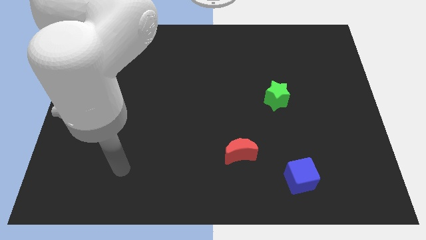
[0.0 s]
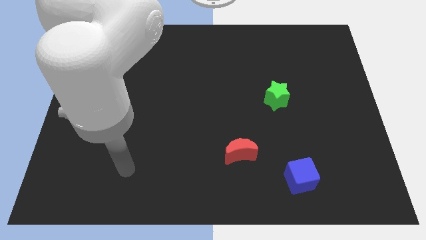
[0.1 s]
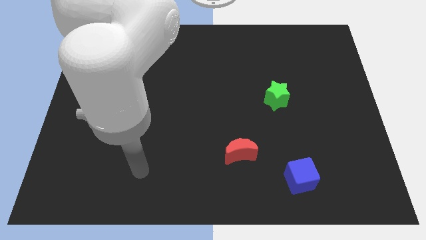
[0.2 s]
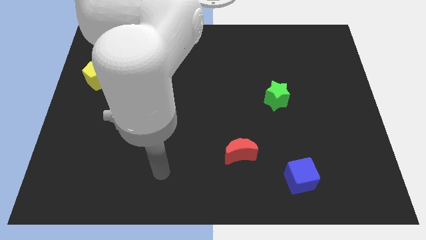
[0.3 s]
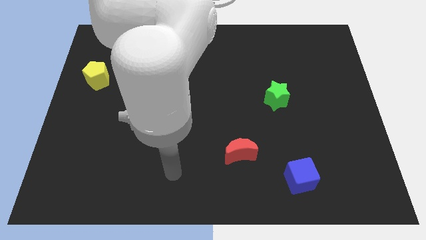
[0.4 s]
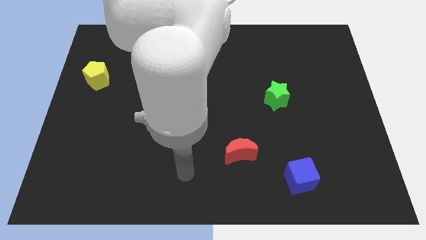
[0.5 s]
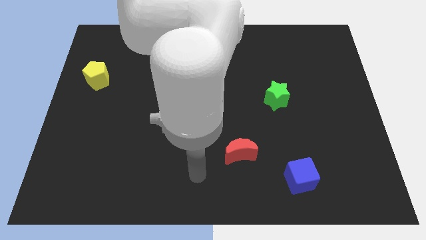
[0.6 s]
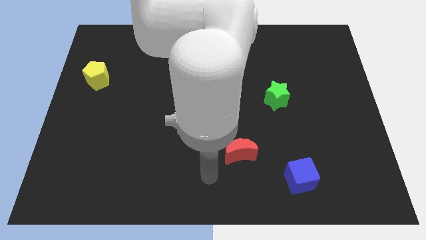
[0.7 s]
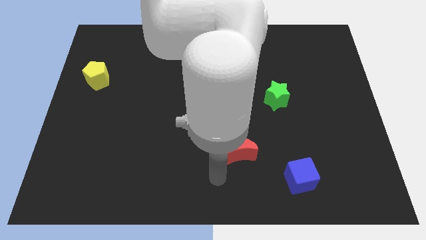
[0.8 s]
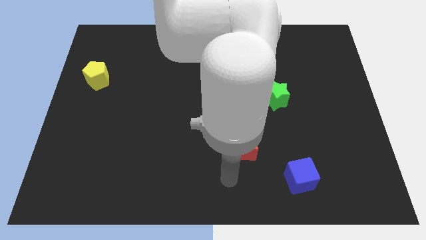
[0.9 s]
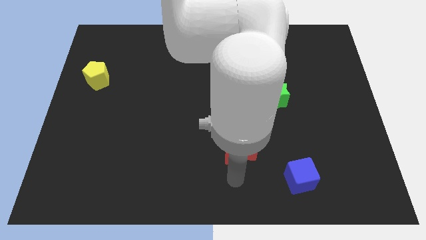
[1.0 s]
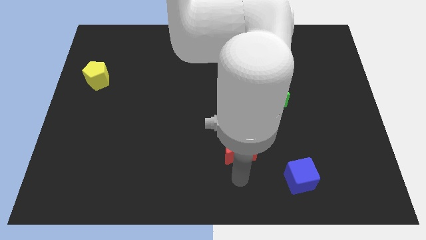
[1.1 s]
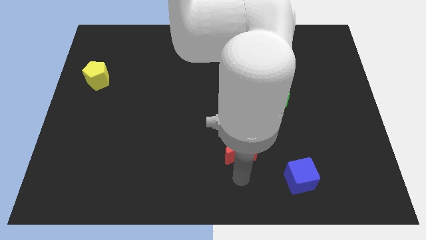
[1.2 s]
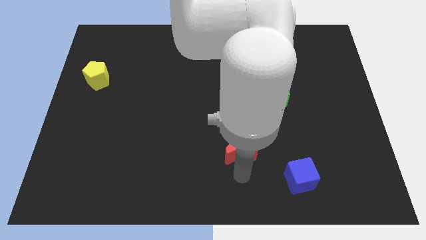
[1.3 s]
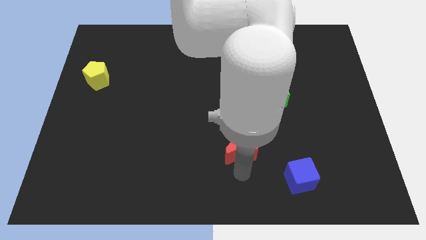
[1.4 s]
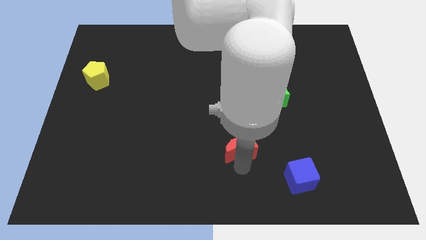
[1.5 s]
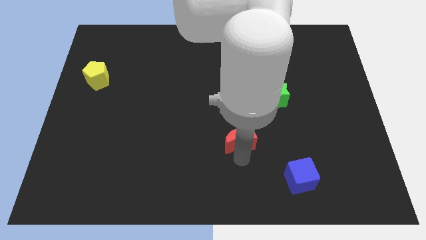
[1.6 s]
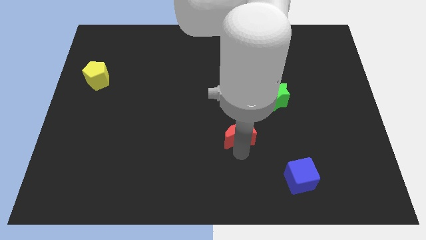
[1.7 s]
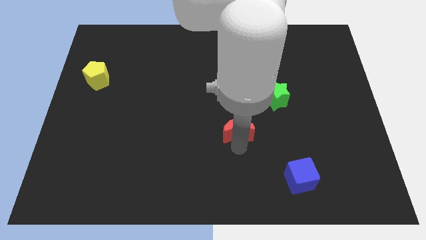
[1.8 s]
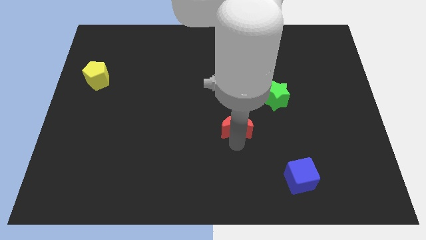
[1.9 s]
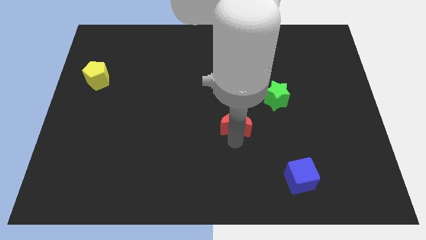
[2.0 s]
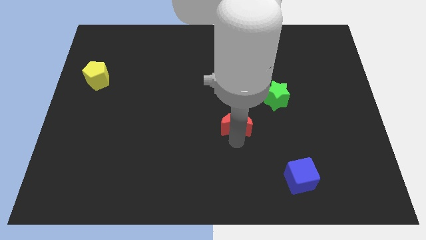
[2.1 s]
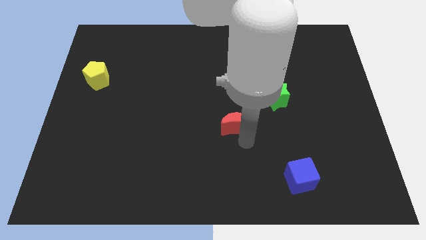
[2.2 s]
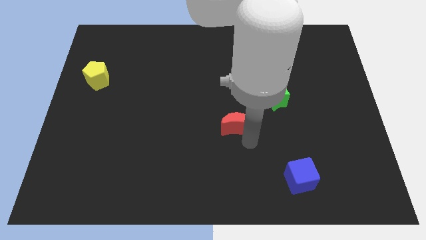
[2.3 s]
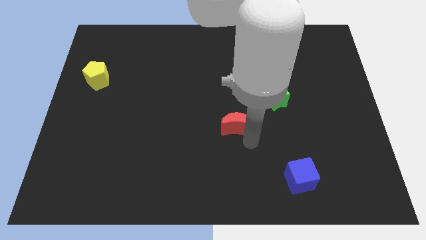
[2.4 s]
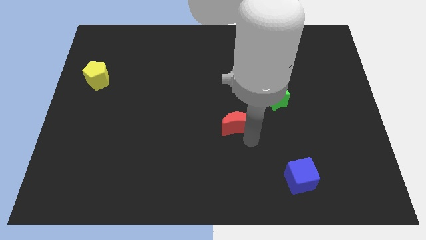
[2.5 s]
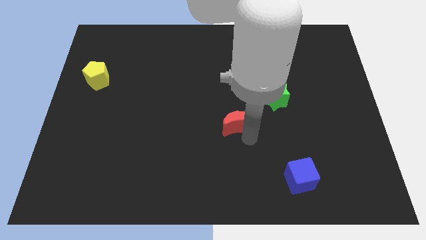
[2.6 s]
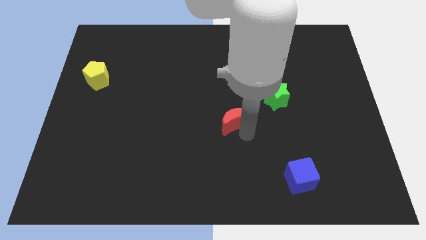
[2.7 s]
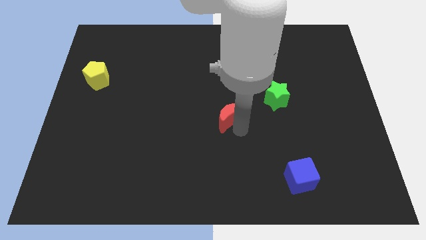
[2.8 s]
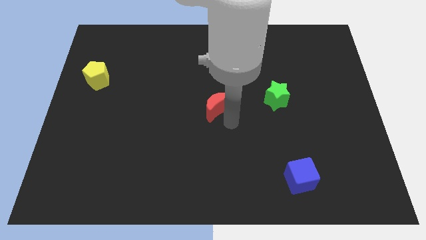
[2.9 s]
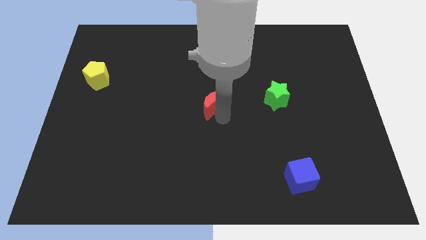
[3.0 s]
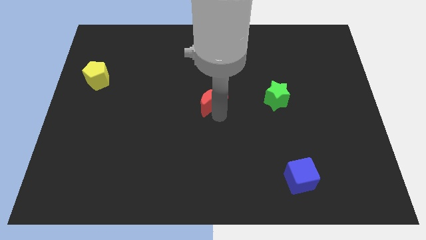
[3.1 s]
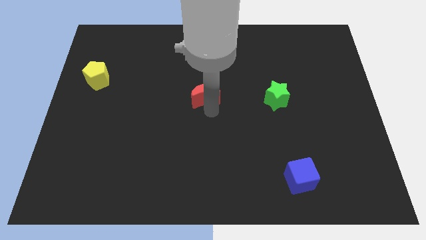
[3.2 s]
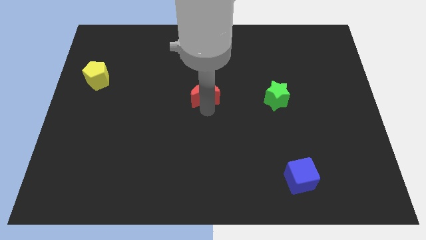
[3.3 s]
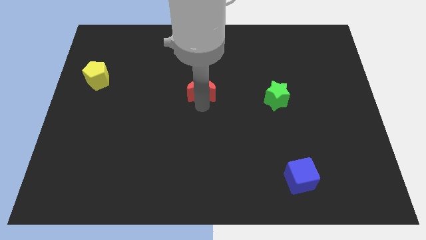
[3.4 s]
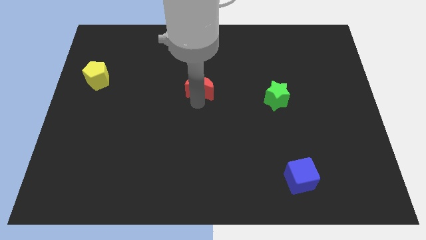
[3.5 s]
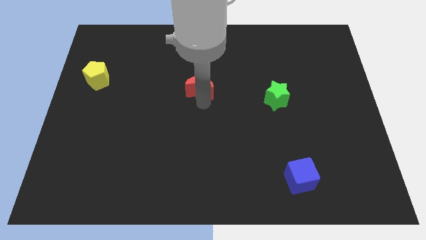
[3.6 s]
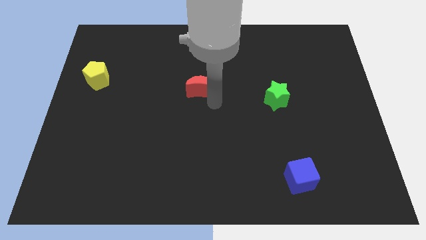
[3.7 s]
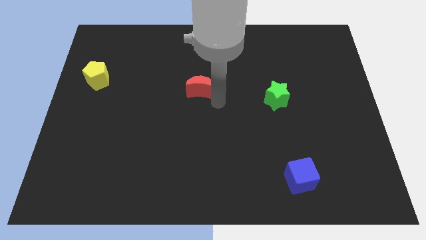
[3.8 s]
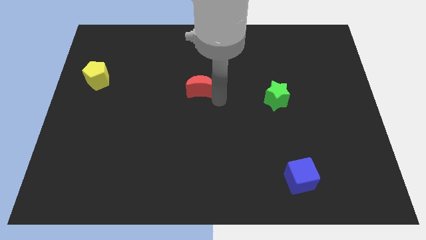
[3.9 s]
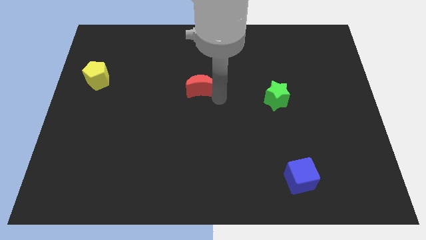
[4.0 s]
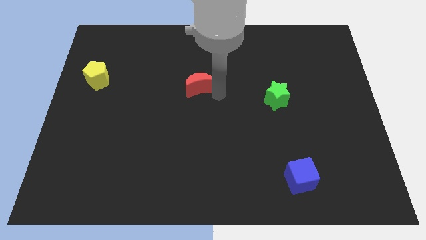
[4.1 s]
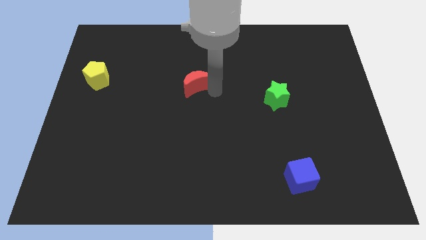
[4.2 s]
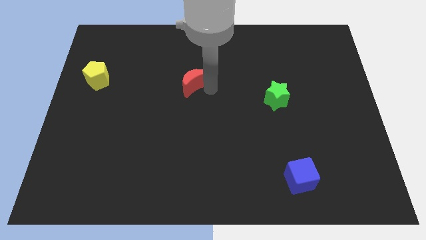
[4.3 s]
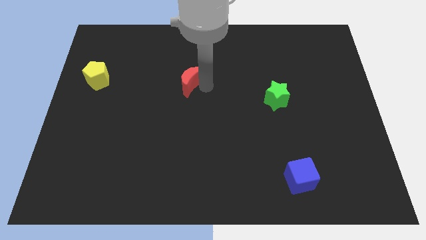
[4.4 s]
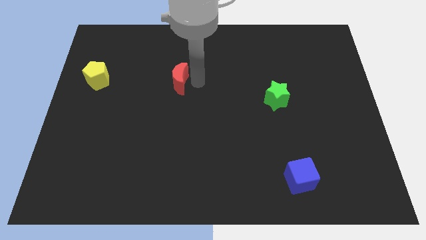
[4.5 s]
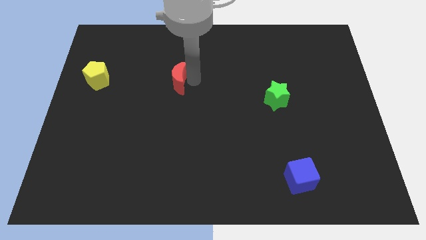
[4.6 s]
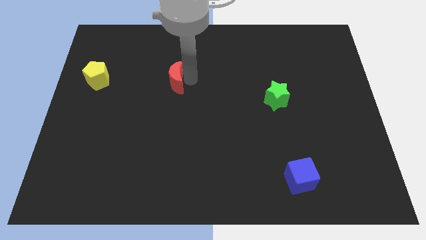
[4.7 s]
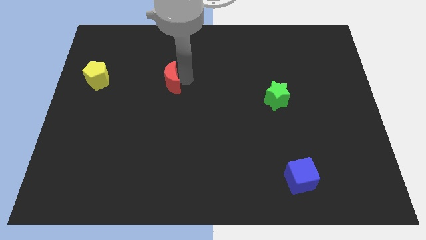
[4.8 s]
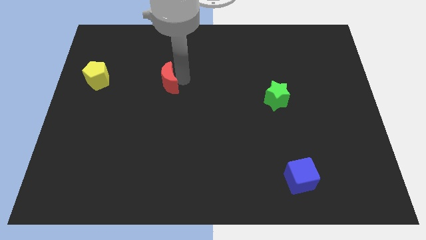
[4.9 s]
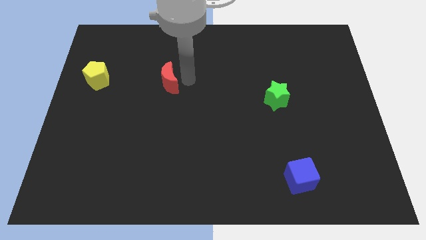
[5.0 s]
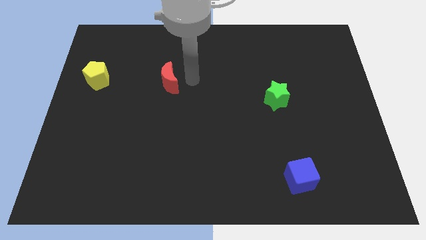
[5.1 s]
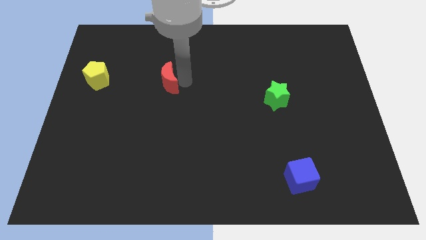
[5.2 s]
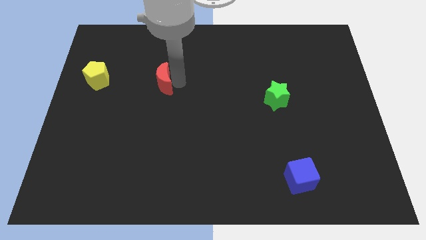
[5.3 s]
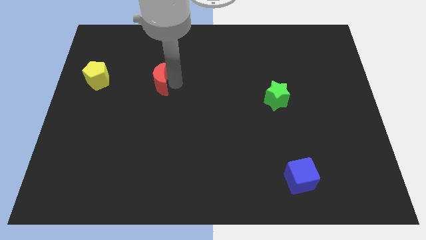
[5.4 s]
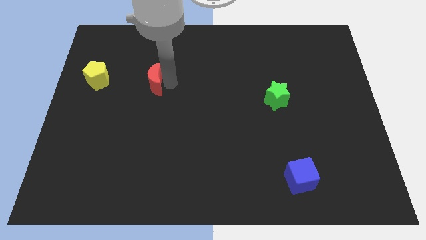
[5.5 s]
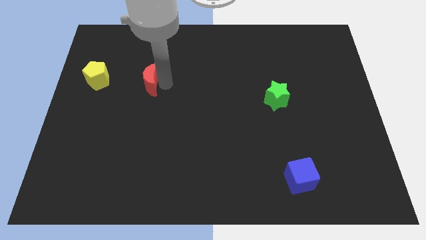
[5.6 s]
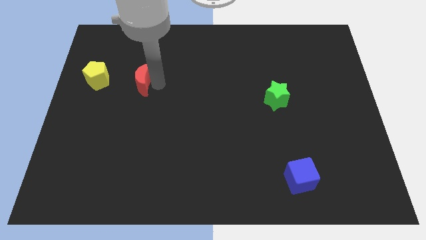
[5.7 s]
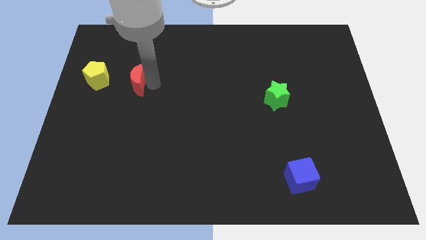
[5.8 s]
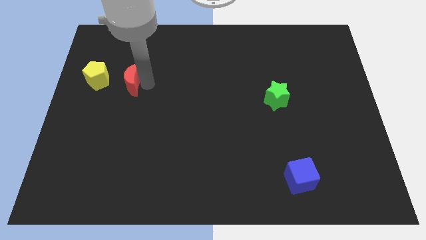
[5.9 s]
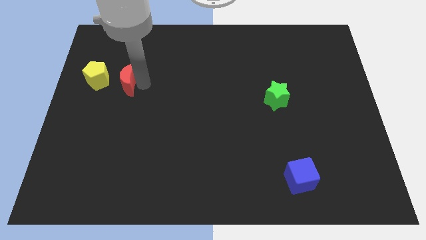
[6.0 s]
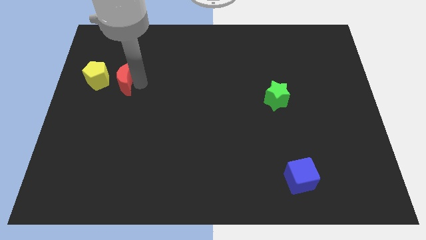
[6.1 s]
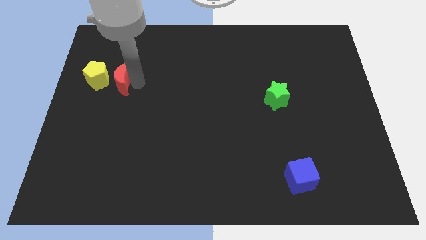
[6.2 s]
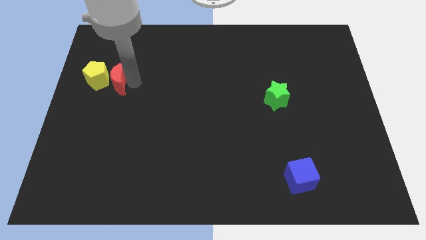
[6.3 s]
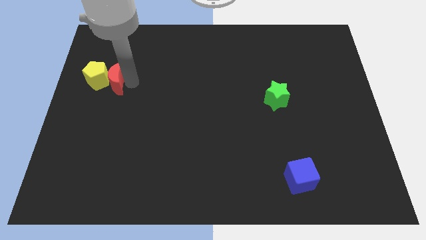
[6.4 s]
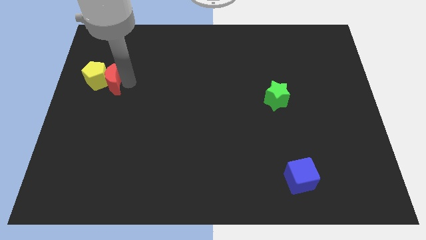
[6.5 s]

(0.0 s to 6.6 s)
move the moon next to the yellow pentagon

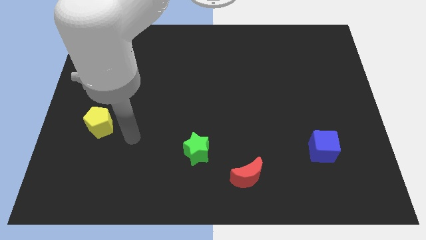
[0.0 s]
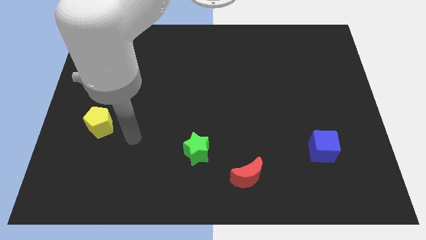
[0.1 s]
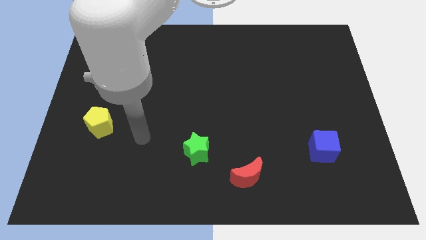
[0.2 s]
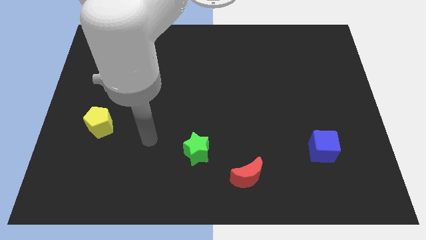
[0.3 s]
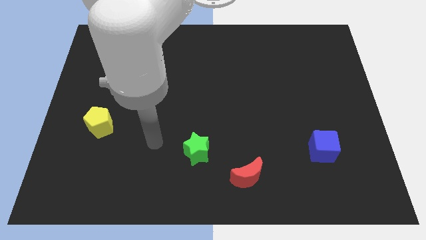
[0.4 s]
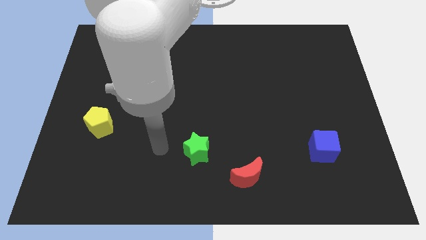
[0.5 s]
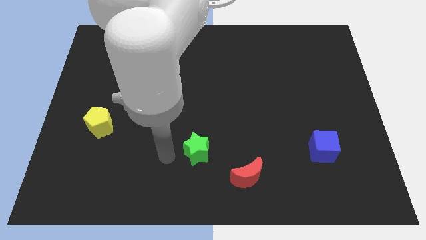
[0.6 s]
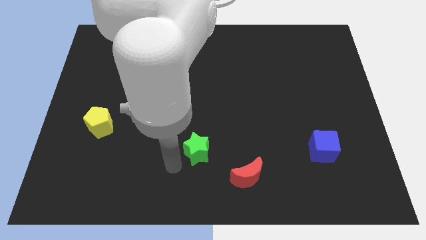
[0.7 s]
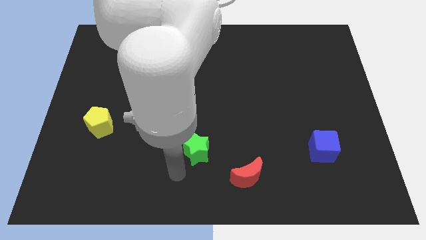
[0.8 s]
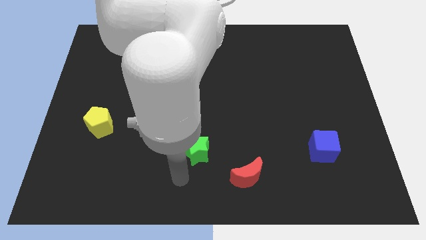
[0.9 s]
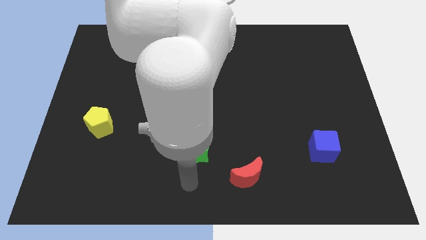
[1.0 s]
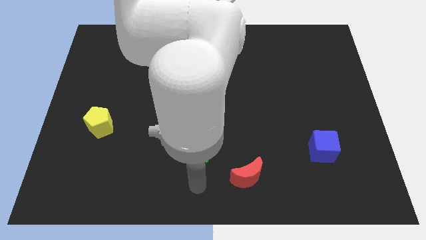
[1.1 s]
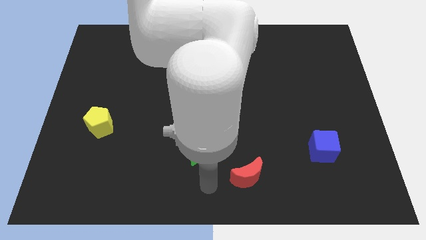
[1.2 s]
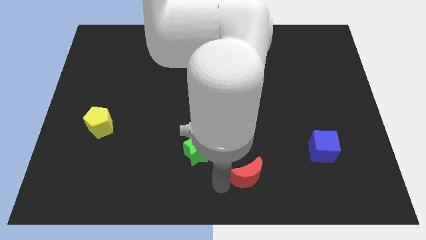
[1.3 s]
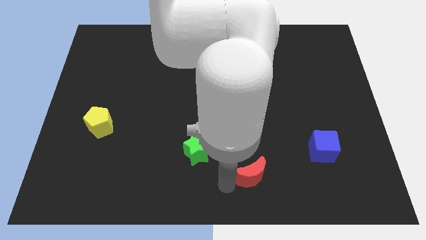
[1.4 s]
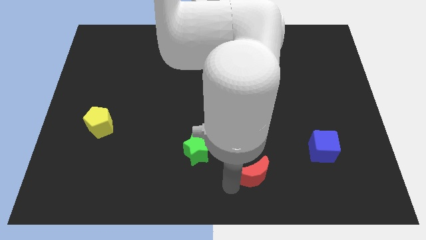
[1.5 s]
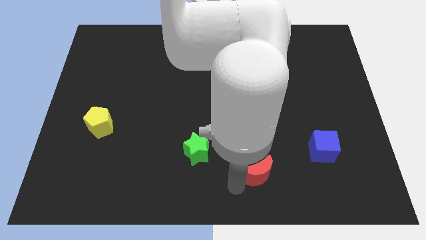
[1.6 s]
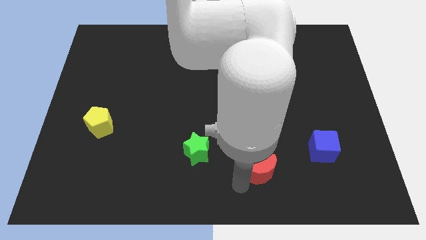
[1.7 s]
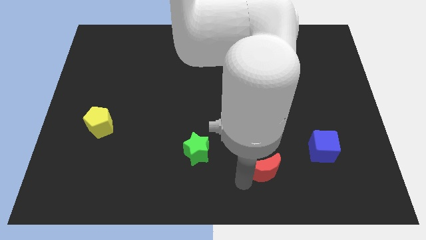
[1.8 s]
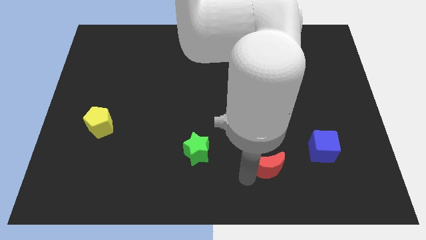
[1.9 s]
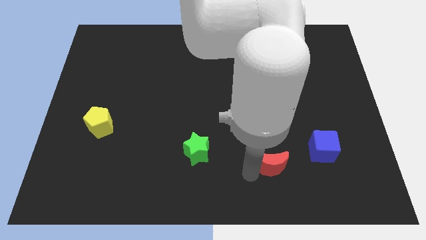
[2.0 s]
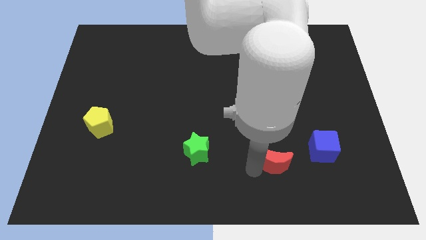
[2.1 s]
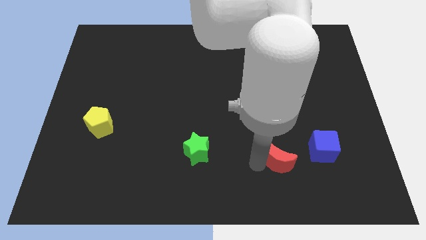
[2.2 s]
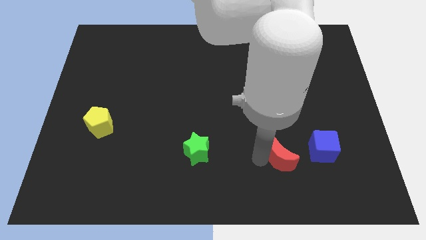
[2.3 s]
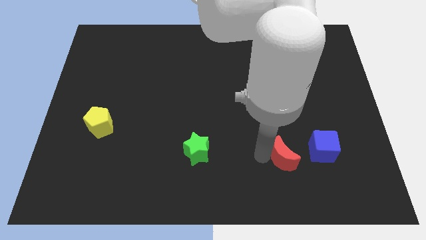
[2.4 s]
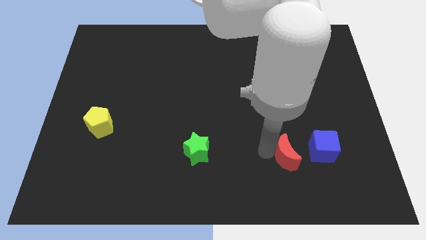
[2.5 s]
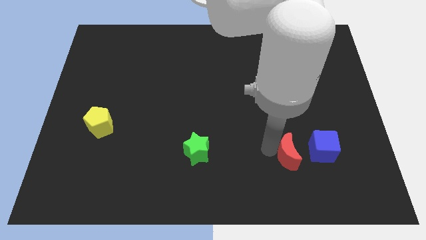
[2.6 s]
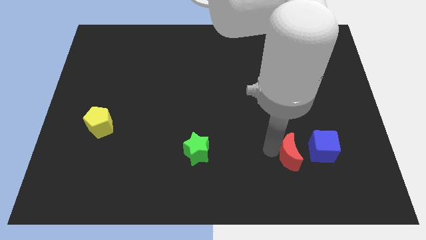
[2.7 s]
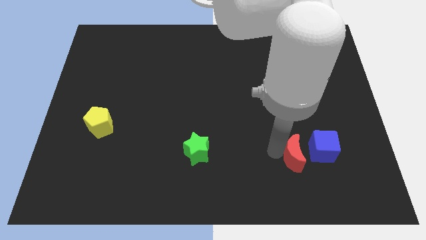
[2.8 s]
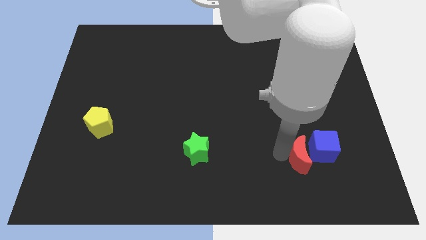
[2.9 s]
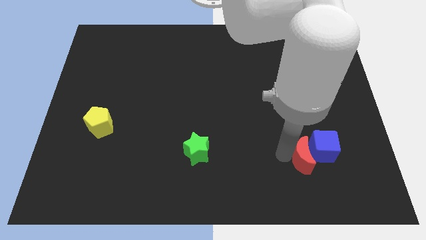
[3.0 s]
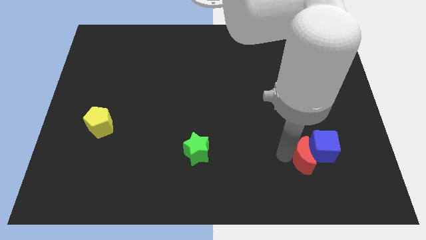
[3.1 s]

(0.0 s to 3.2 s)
put the red block next to the cube
